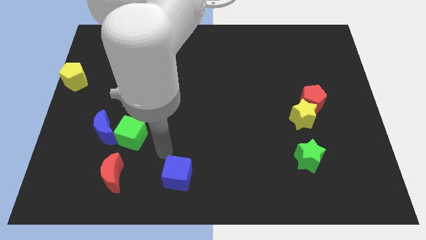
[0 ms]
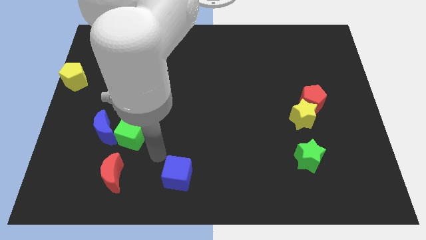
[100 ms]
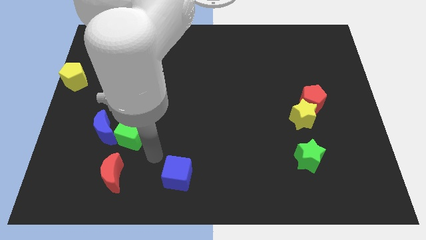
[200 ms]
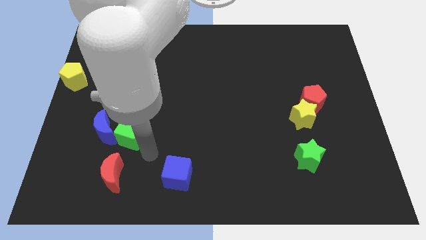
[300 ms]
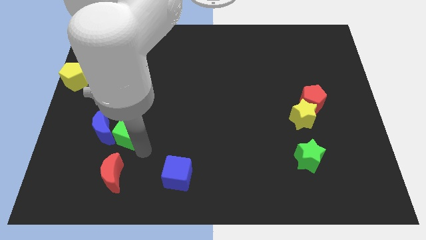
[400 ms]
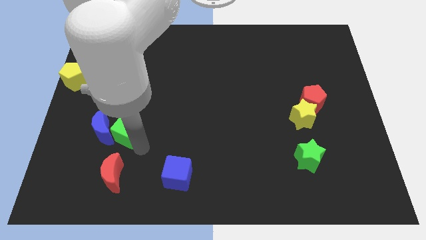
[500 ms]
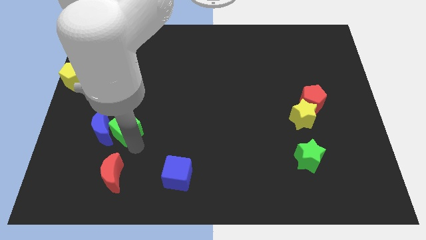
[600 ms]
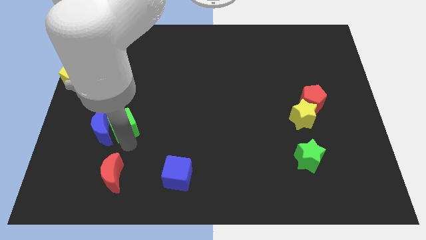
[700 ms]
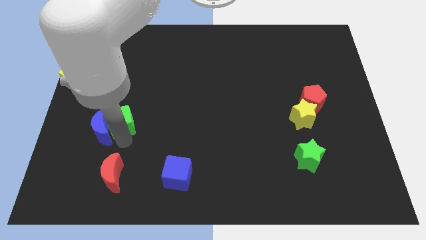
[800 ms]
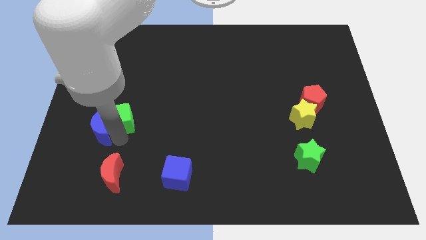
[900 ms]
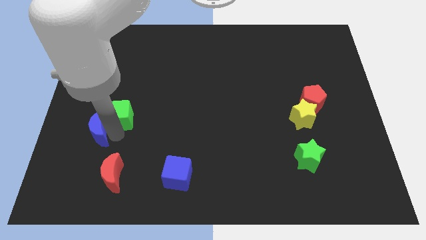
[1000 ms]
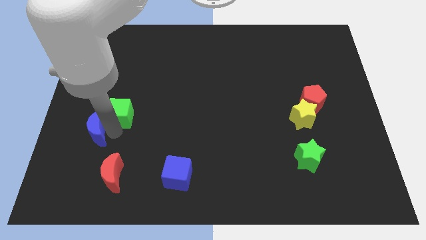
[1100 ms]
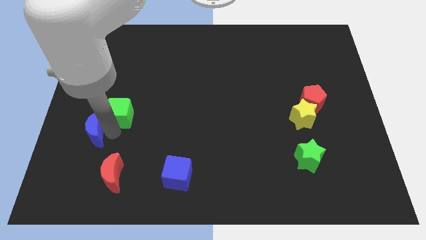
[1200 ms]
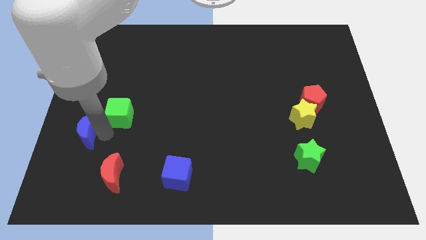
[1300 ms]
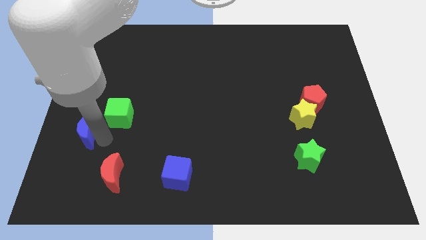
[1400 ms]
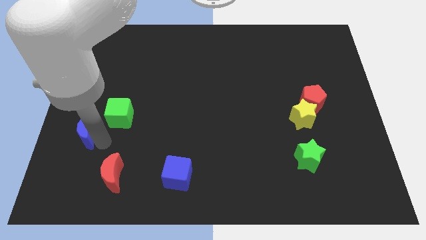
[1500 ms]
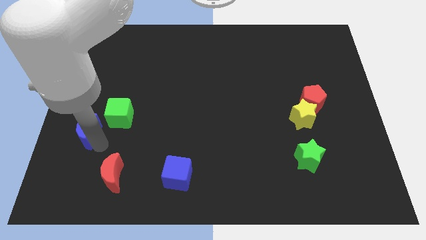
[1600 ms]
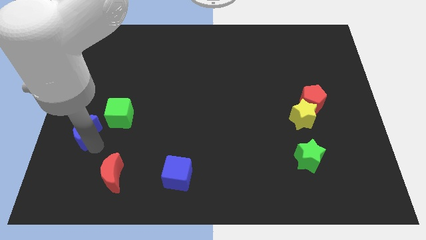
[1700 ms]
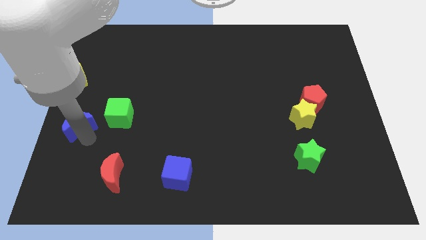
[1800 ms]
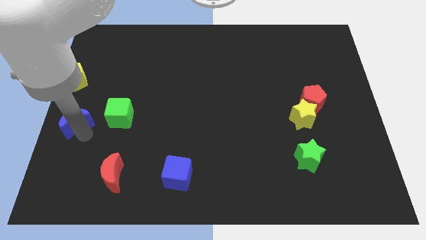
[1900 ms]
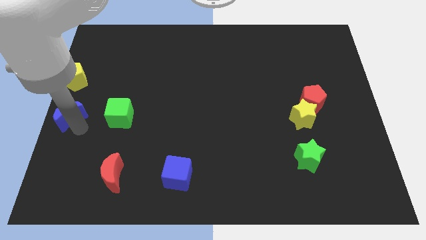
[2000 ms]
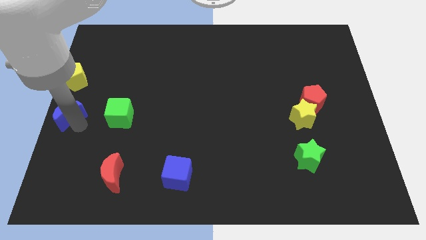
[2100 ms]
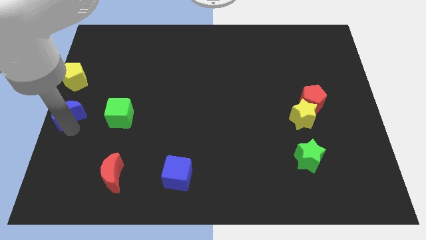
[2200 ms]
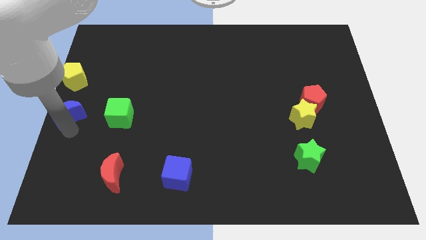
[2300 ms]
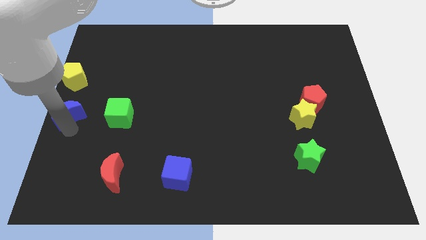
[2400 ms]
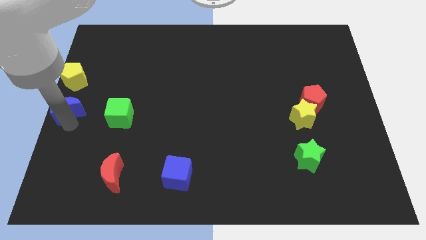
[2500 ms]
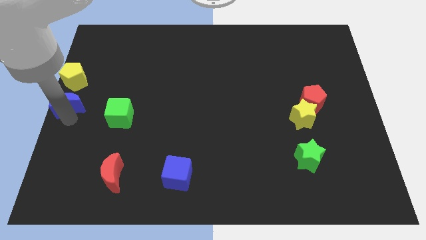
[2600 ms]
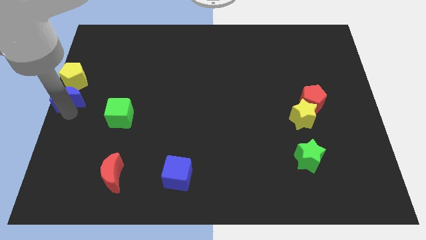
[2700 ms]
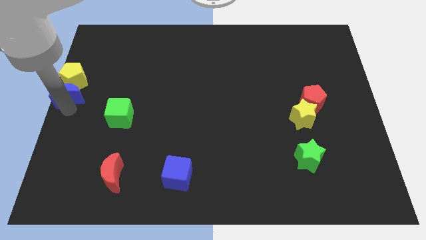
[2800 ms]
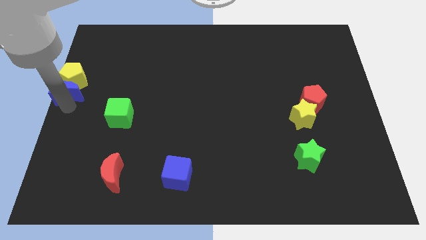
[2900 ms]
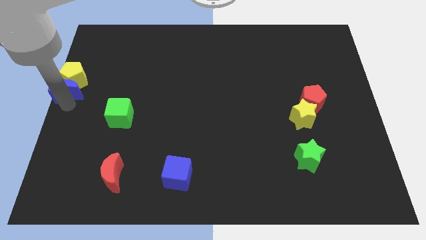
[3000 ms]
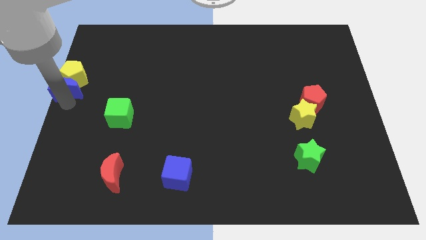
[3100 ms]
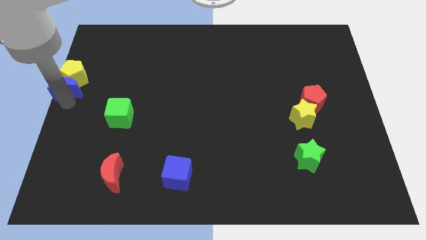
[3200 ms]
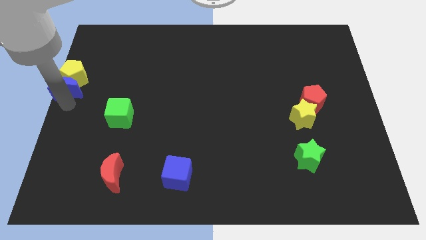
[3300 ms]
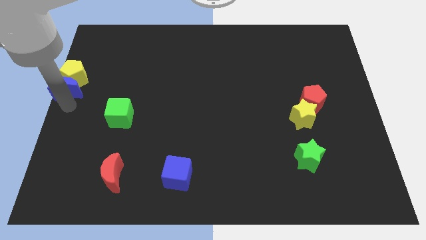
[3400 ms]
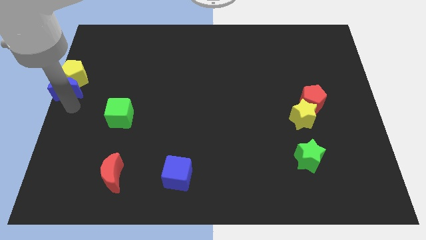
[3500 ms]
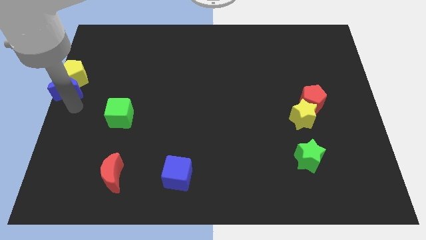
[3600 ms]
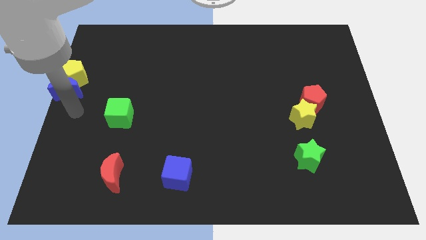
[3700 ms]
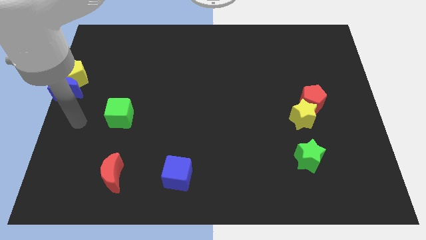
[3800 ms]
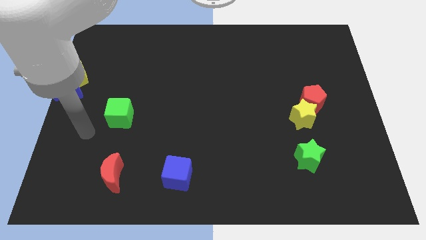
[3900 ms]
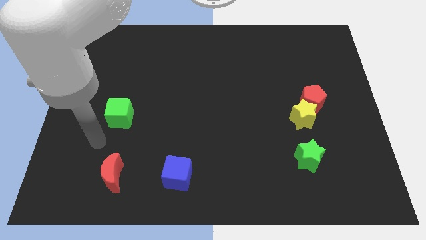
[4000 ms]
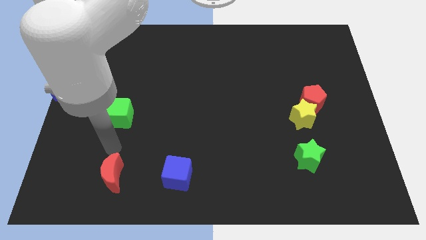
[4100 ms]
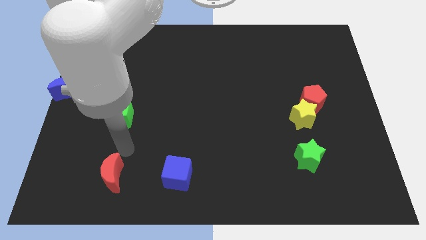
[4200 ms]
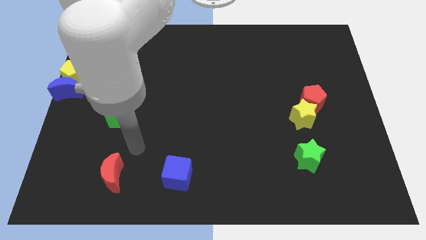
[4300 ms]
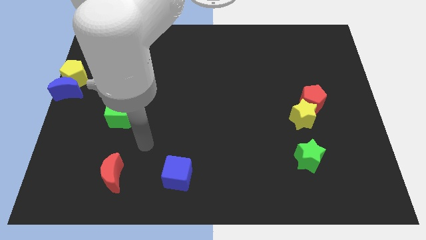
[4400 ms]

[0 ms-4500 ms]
place blue moon under the yellow pentagon

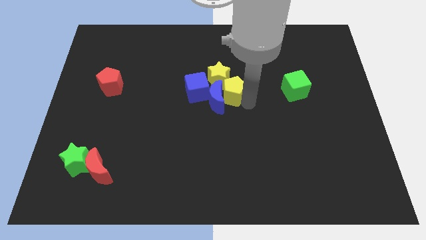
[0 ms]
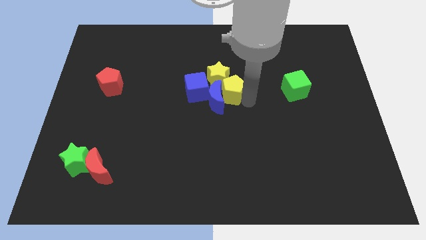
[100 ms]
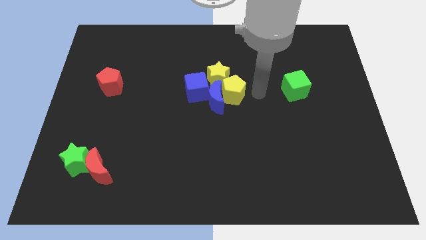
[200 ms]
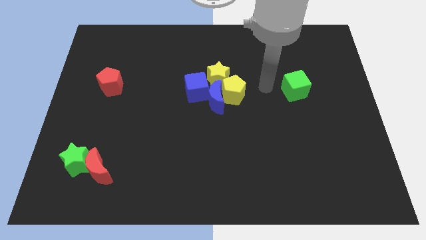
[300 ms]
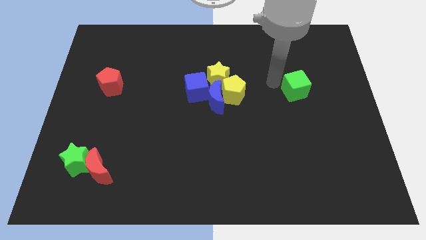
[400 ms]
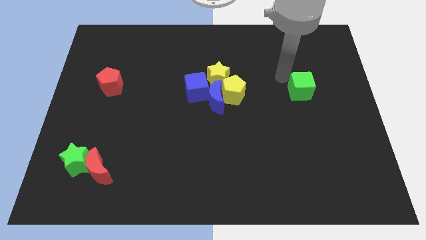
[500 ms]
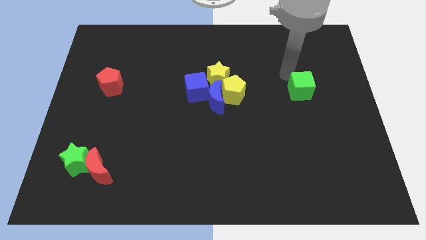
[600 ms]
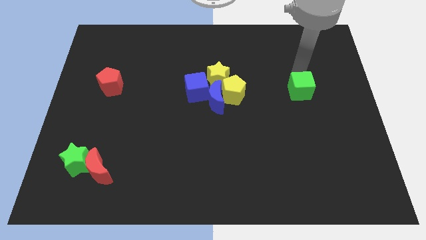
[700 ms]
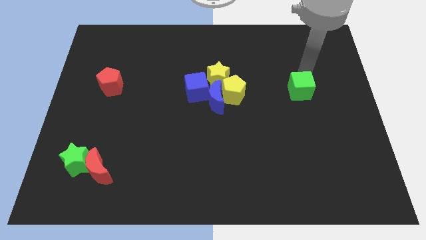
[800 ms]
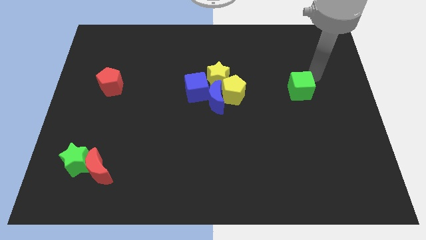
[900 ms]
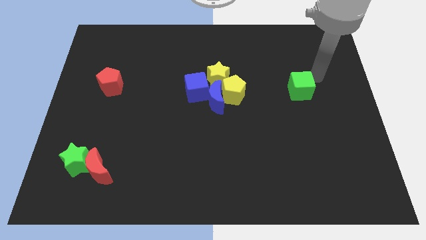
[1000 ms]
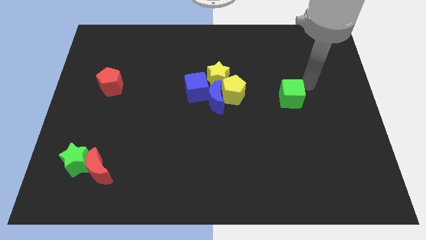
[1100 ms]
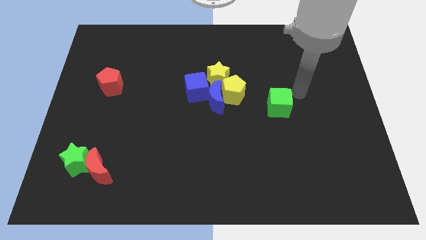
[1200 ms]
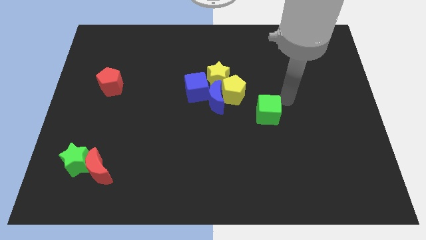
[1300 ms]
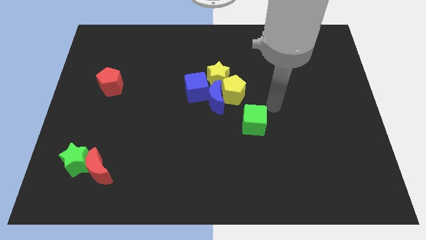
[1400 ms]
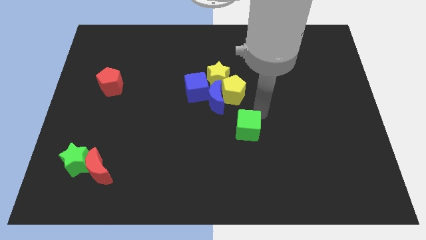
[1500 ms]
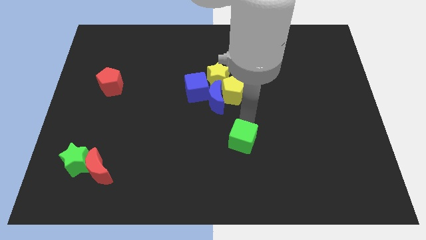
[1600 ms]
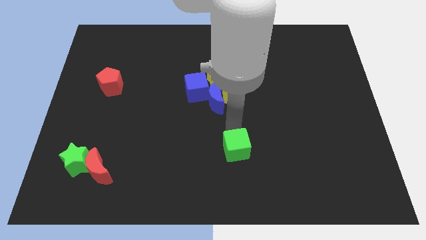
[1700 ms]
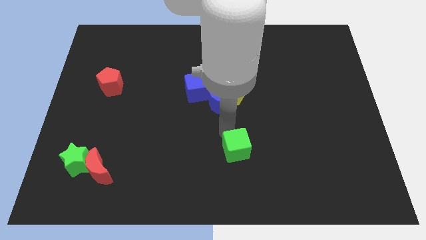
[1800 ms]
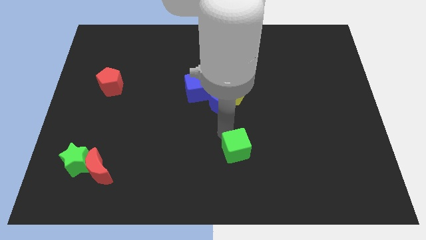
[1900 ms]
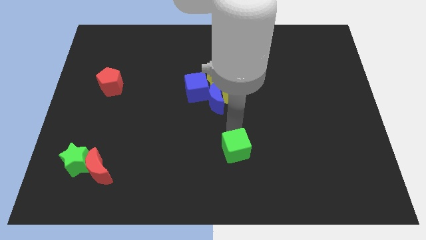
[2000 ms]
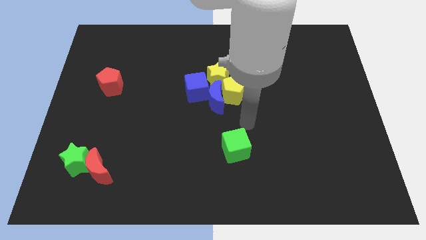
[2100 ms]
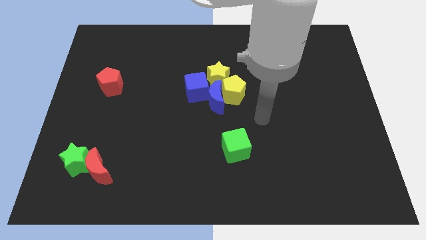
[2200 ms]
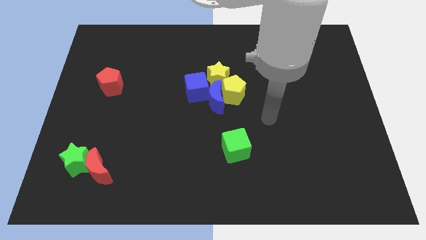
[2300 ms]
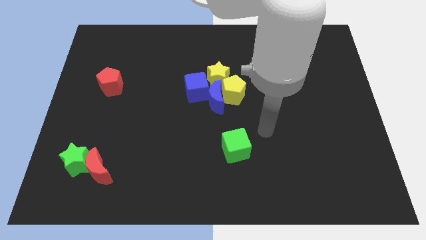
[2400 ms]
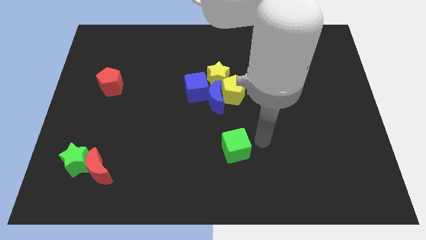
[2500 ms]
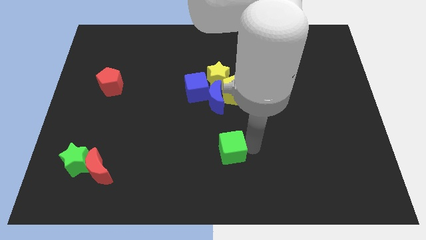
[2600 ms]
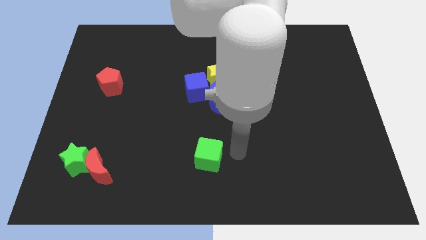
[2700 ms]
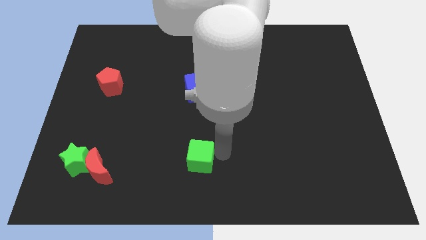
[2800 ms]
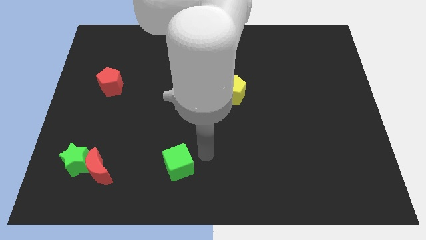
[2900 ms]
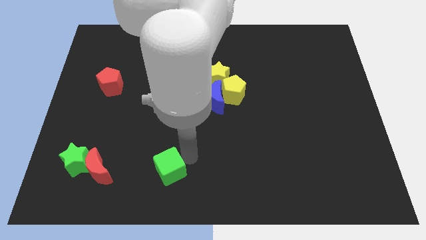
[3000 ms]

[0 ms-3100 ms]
place the green cube horizontal to the red moon

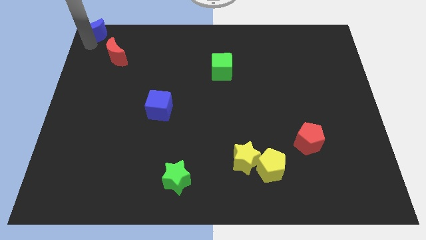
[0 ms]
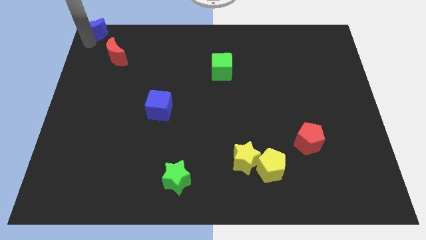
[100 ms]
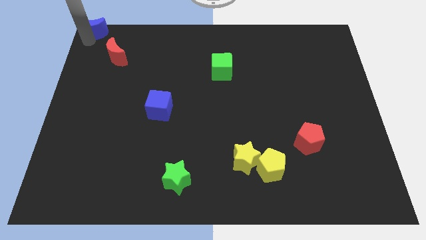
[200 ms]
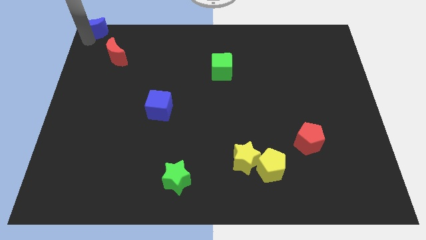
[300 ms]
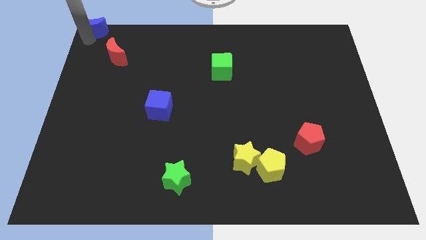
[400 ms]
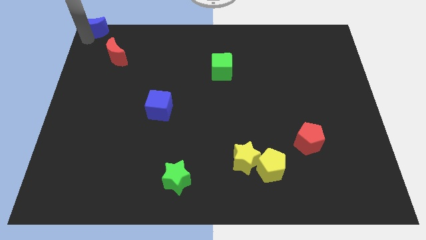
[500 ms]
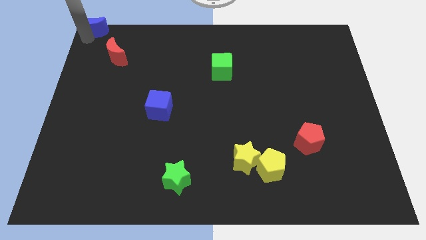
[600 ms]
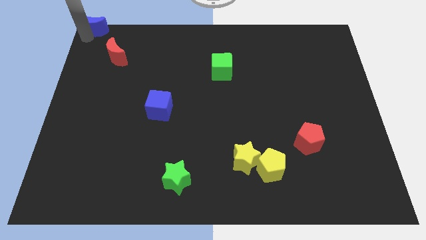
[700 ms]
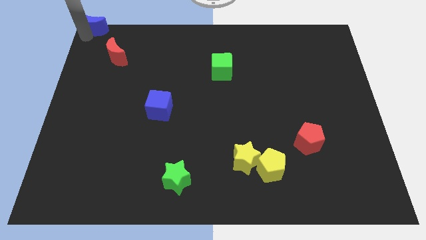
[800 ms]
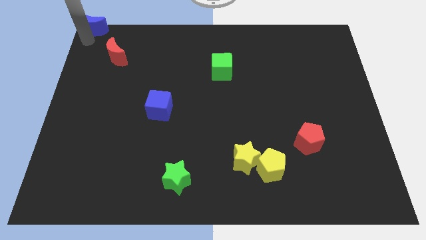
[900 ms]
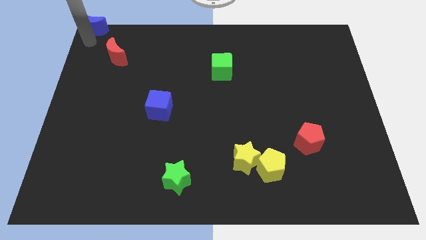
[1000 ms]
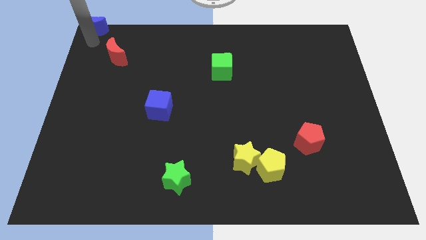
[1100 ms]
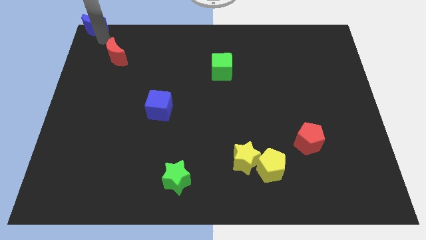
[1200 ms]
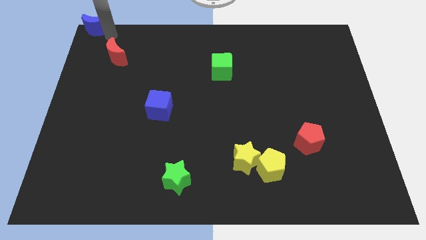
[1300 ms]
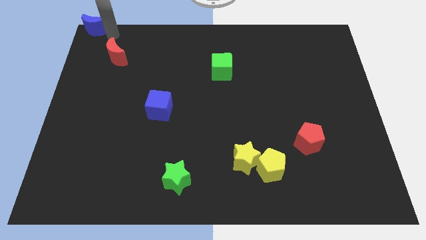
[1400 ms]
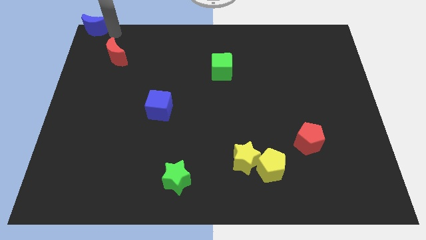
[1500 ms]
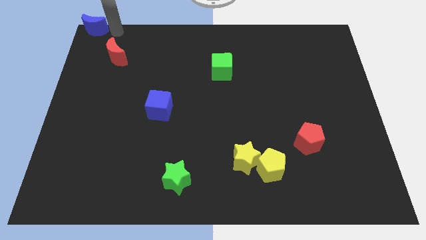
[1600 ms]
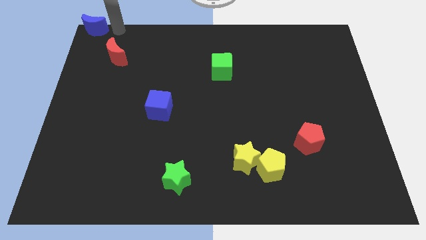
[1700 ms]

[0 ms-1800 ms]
push the blue crescent to the top left corner of the board
